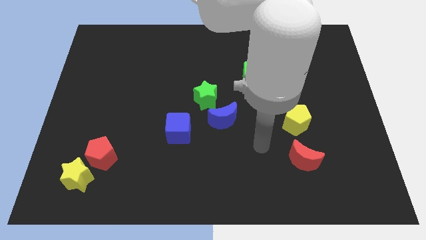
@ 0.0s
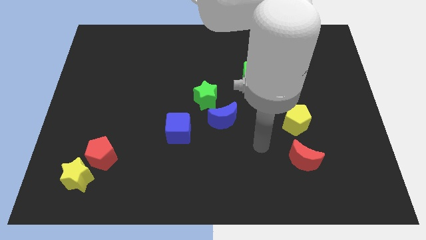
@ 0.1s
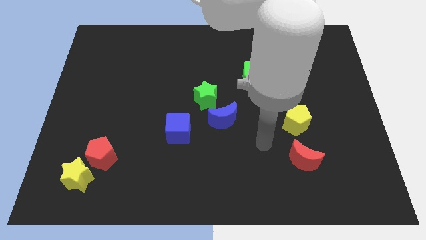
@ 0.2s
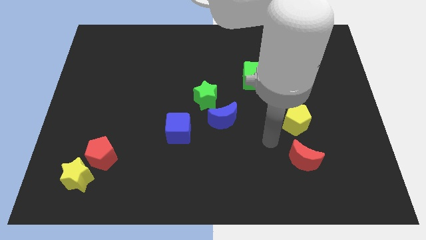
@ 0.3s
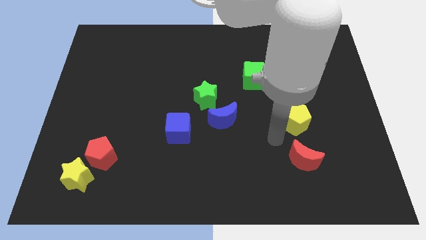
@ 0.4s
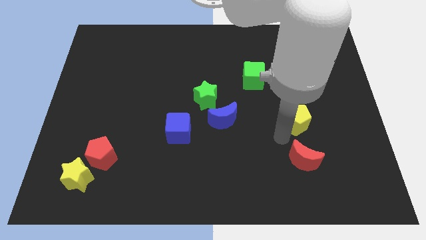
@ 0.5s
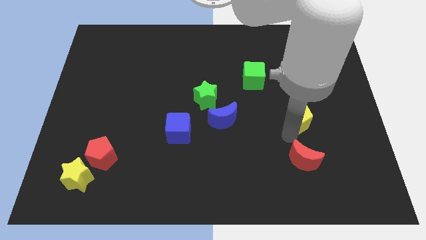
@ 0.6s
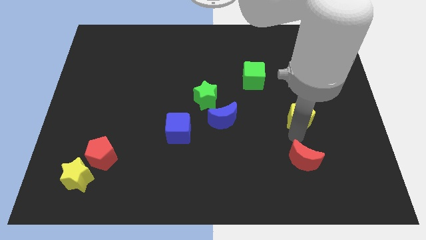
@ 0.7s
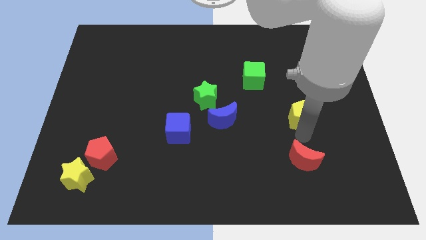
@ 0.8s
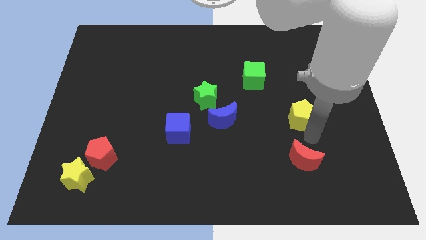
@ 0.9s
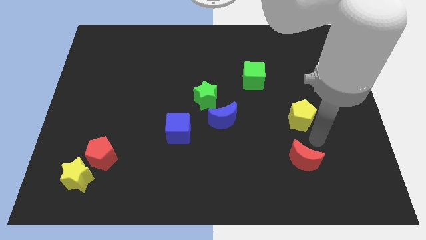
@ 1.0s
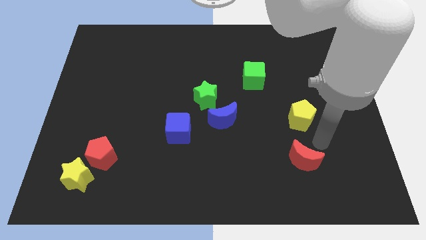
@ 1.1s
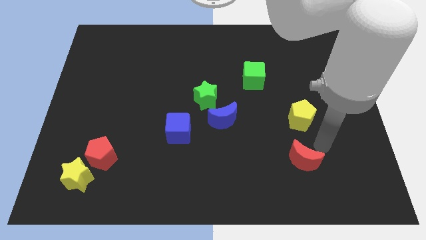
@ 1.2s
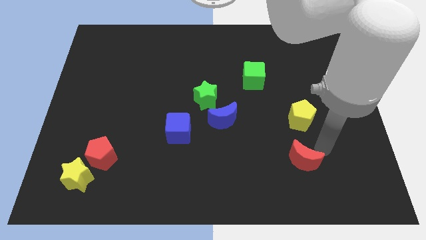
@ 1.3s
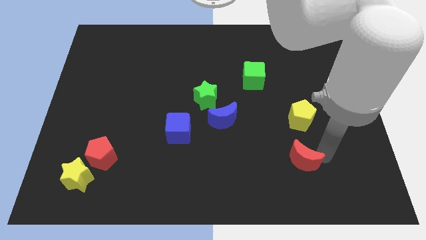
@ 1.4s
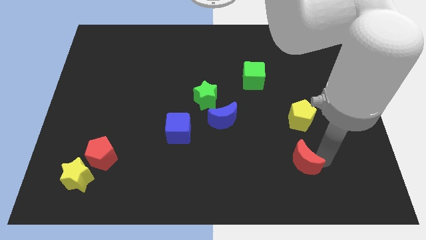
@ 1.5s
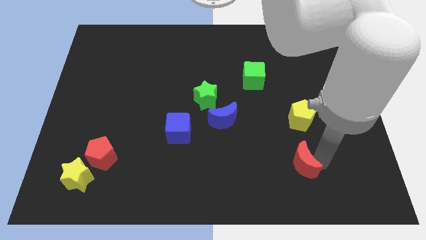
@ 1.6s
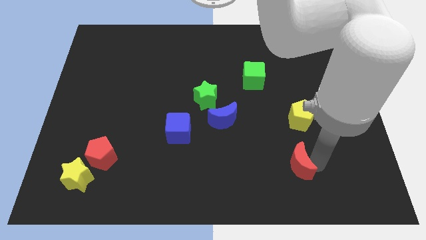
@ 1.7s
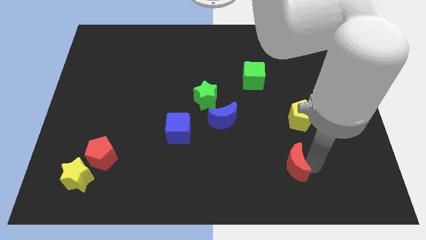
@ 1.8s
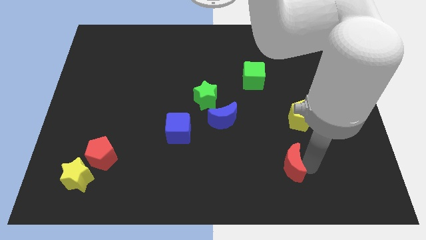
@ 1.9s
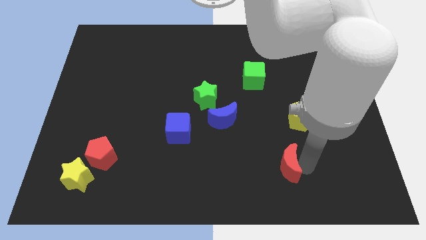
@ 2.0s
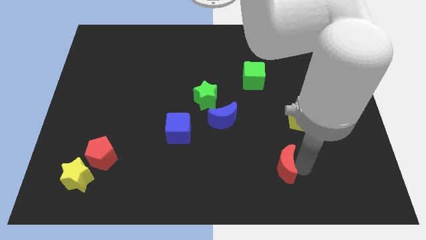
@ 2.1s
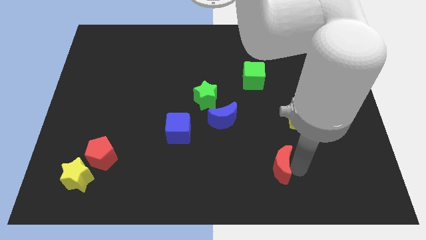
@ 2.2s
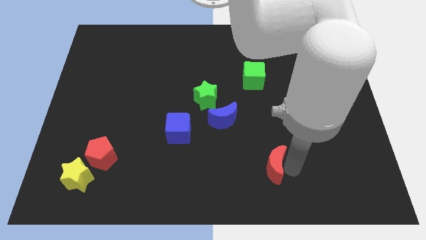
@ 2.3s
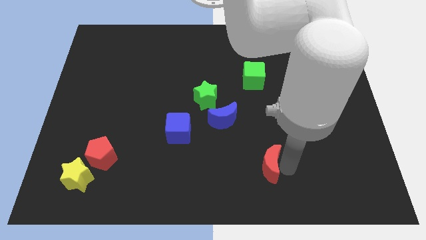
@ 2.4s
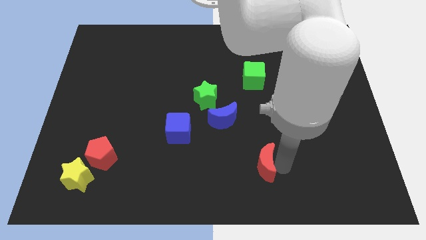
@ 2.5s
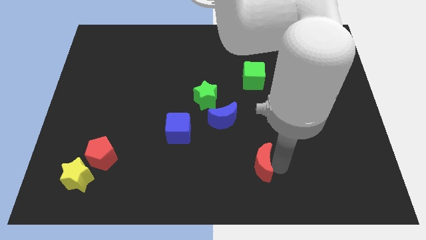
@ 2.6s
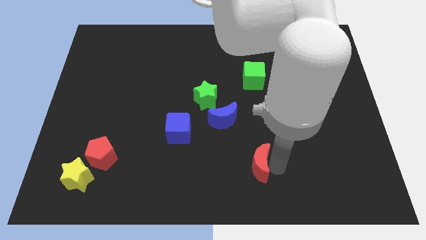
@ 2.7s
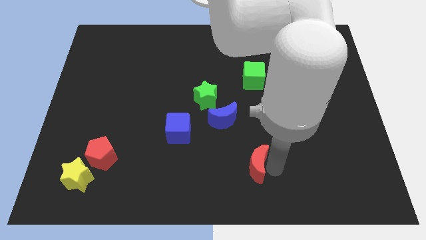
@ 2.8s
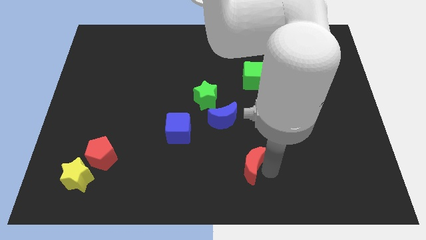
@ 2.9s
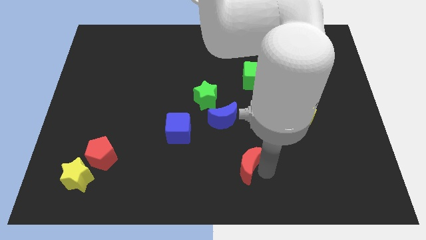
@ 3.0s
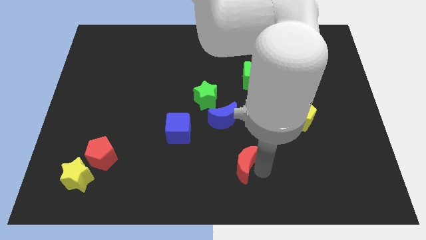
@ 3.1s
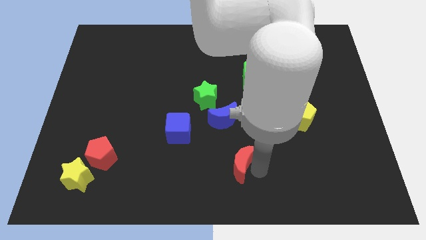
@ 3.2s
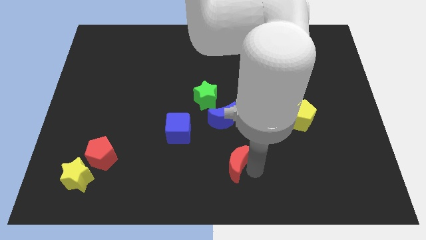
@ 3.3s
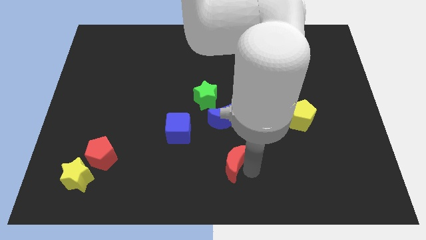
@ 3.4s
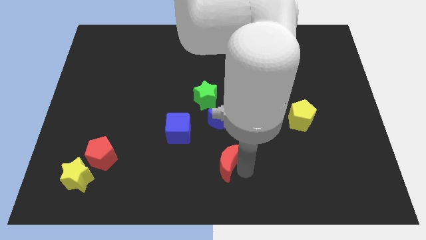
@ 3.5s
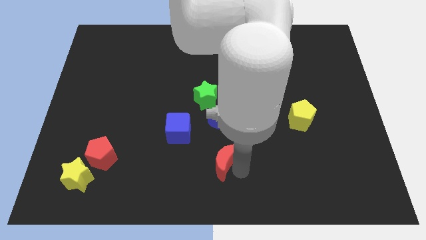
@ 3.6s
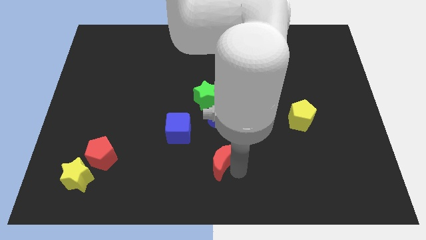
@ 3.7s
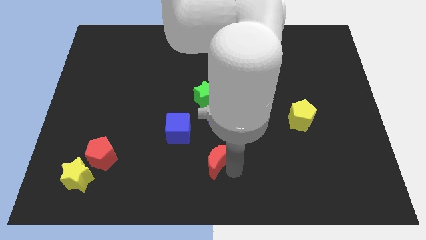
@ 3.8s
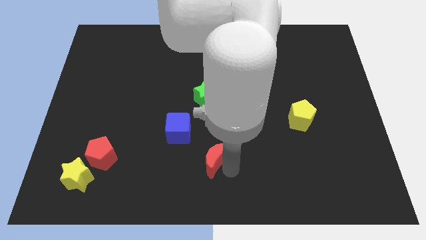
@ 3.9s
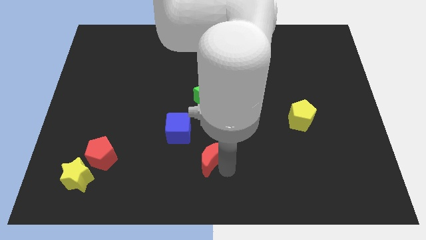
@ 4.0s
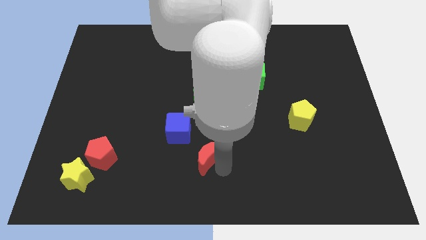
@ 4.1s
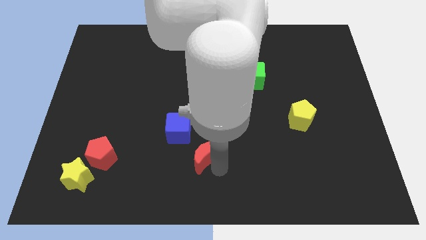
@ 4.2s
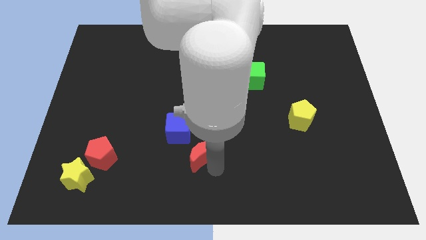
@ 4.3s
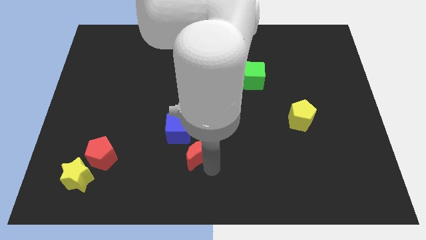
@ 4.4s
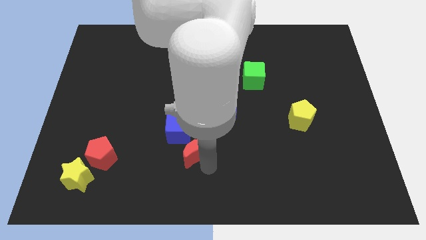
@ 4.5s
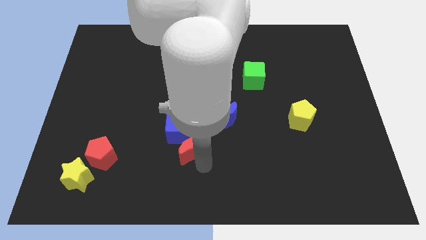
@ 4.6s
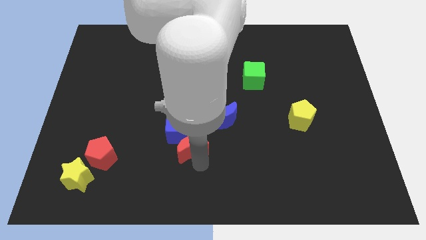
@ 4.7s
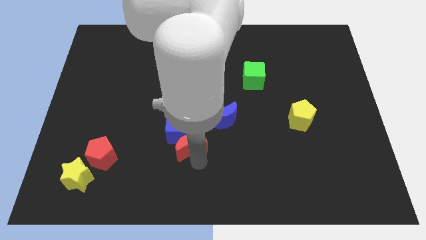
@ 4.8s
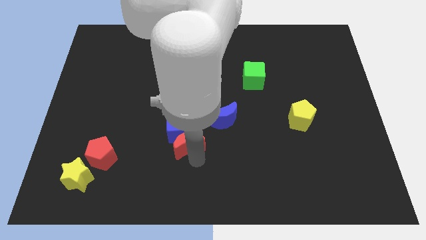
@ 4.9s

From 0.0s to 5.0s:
push the red moon next to the blue cube

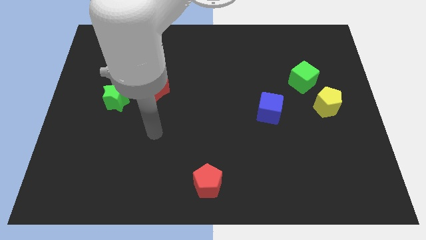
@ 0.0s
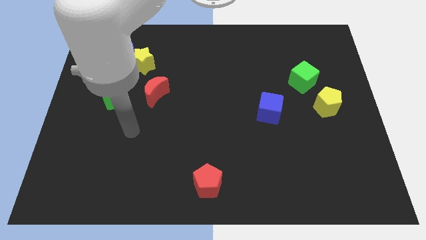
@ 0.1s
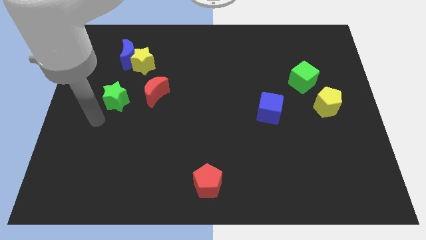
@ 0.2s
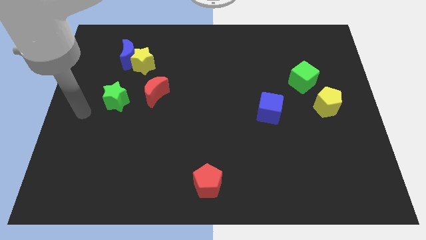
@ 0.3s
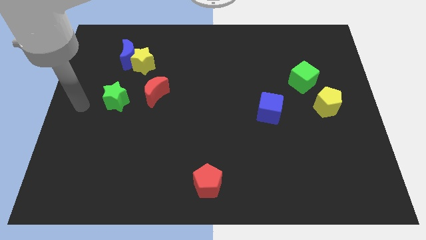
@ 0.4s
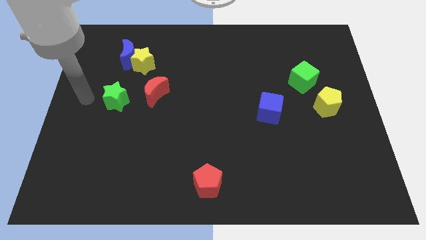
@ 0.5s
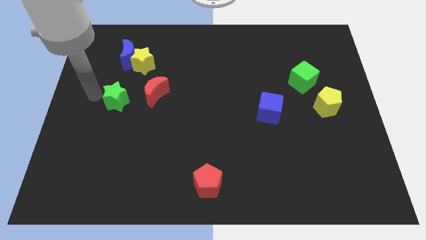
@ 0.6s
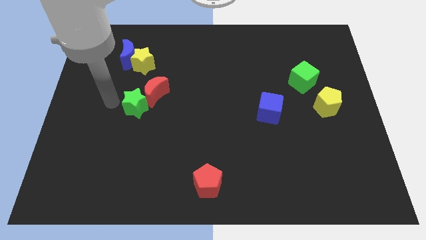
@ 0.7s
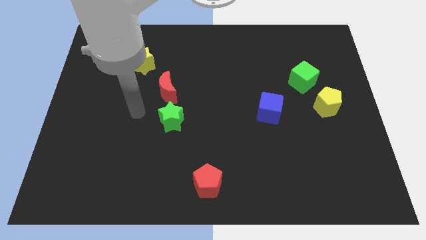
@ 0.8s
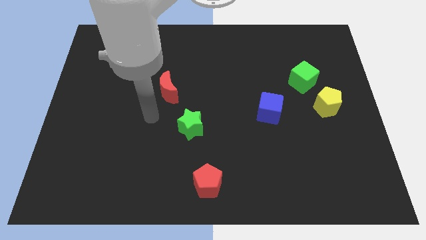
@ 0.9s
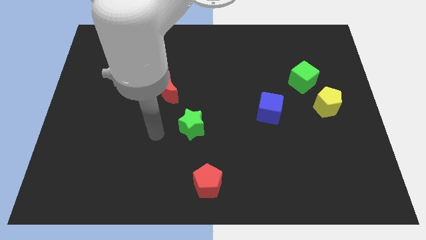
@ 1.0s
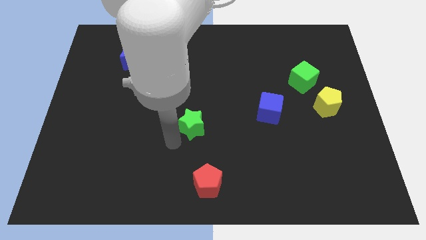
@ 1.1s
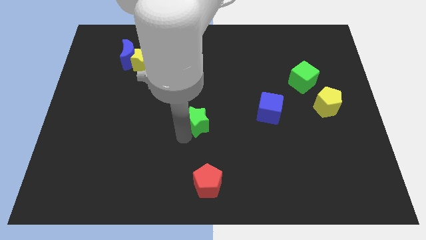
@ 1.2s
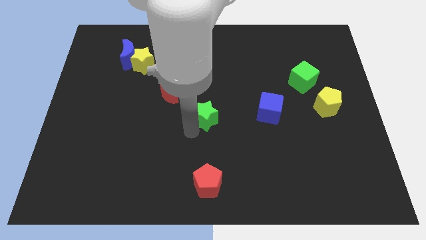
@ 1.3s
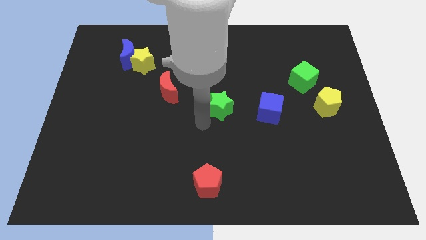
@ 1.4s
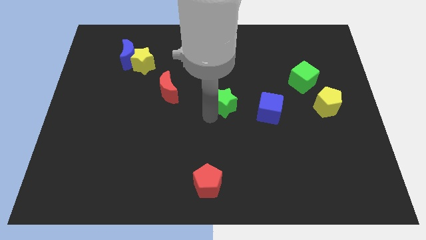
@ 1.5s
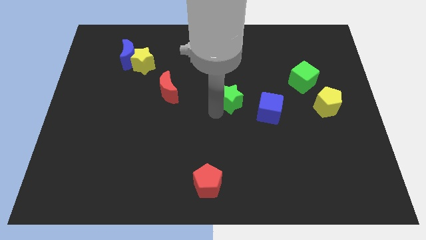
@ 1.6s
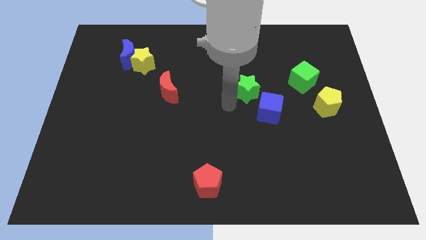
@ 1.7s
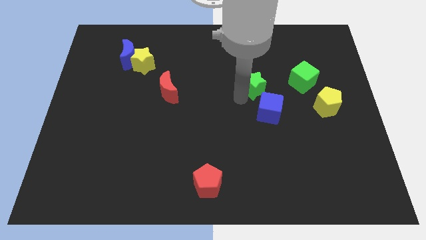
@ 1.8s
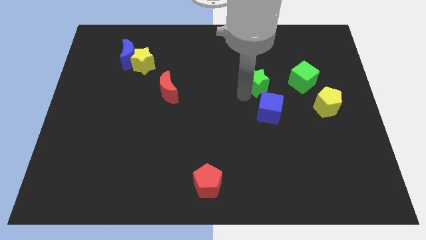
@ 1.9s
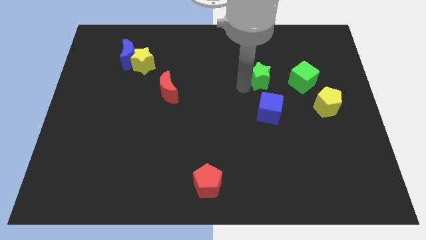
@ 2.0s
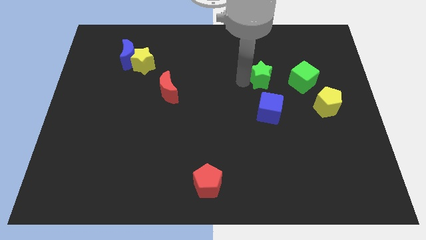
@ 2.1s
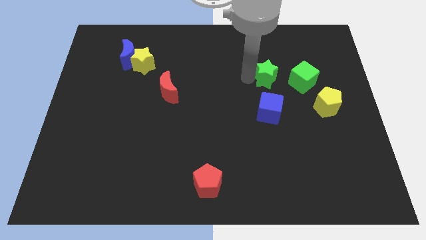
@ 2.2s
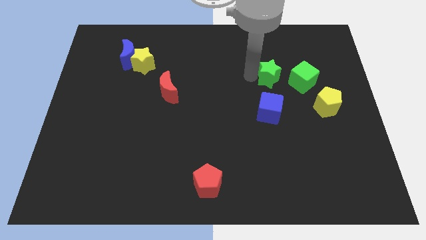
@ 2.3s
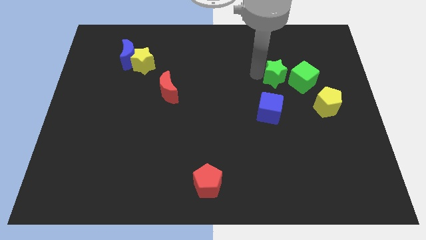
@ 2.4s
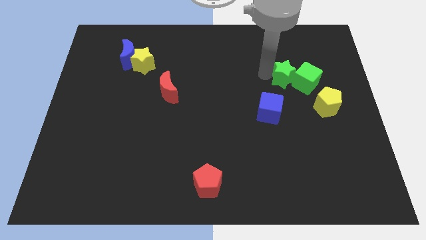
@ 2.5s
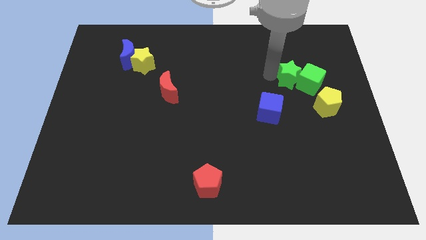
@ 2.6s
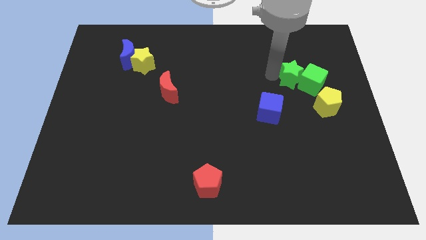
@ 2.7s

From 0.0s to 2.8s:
put the green star close to the green cube

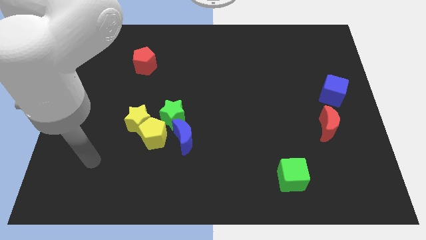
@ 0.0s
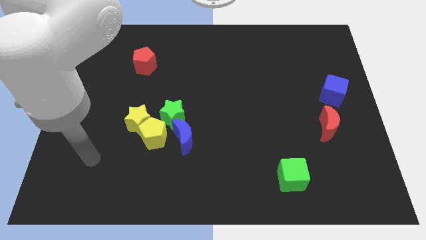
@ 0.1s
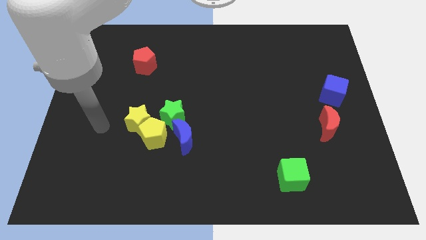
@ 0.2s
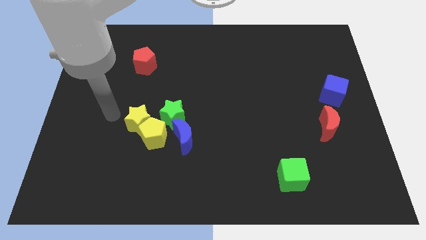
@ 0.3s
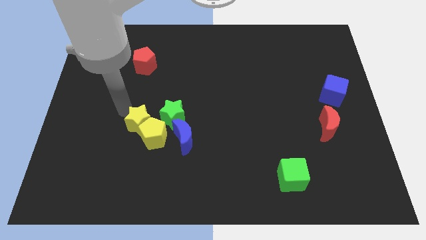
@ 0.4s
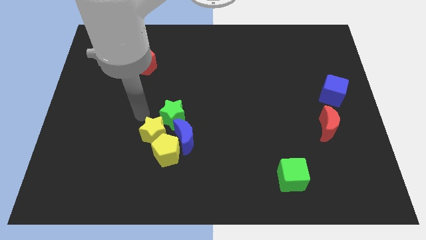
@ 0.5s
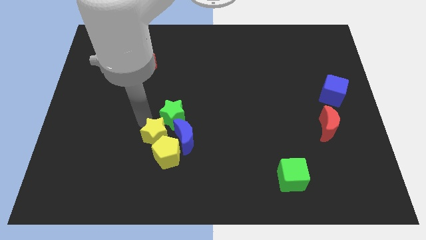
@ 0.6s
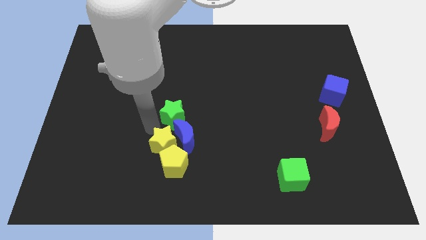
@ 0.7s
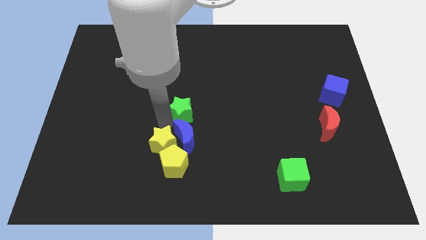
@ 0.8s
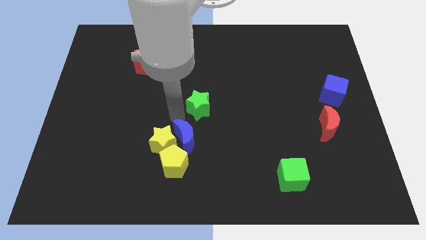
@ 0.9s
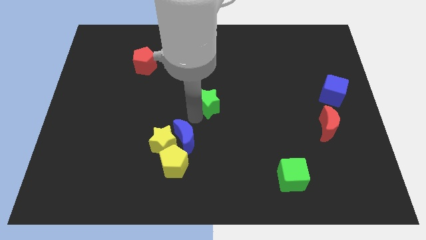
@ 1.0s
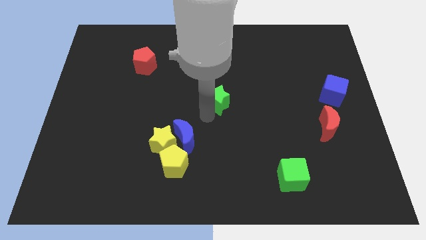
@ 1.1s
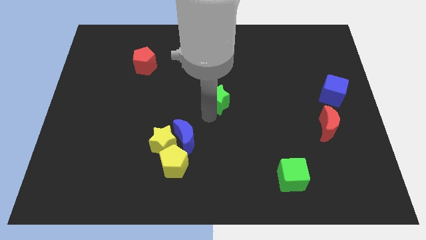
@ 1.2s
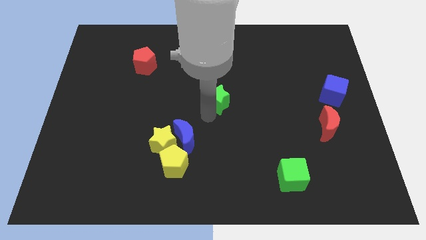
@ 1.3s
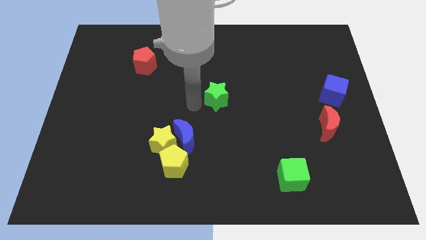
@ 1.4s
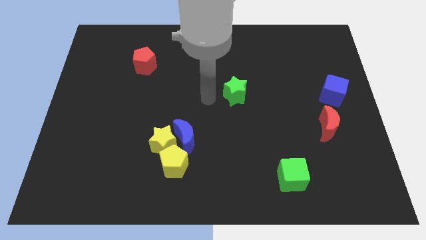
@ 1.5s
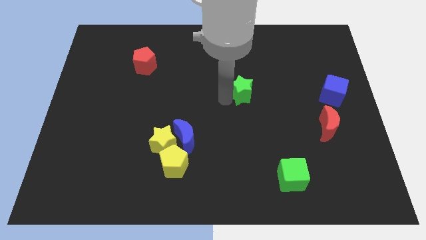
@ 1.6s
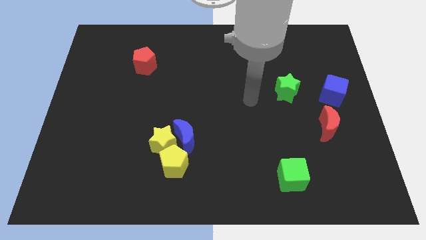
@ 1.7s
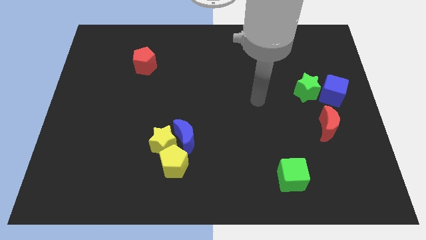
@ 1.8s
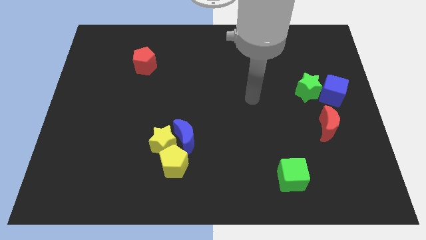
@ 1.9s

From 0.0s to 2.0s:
push the green star next to the blue cube
